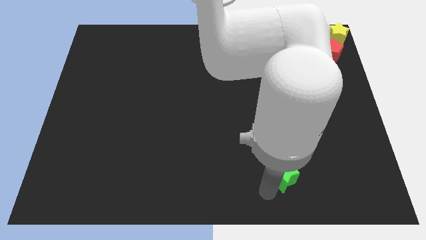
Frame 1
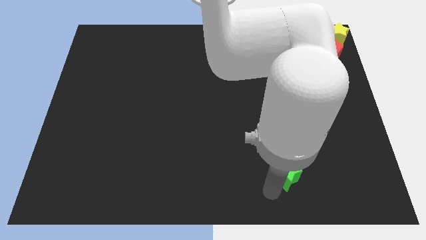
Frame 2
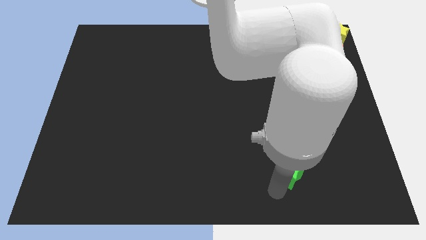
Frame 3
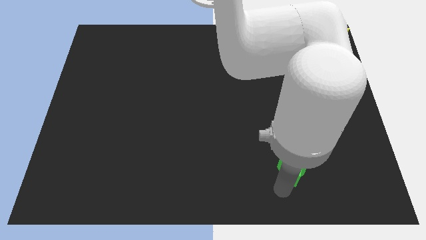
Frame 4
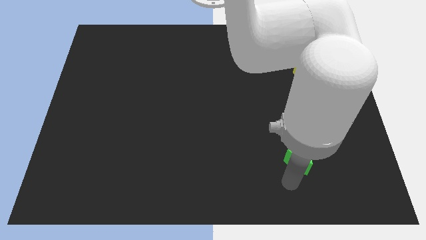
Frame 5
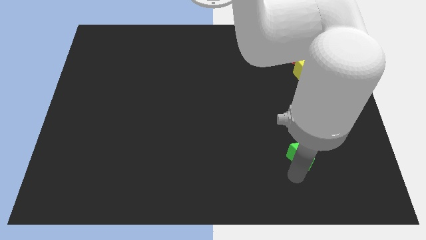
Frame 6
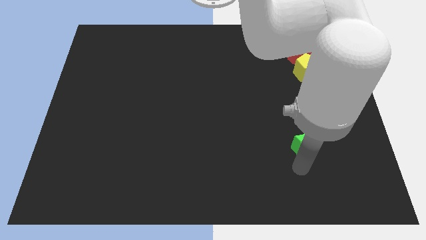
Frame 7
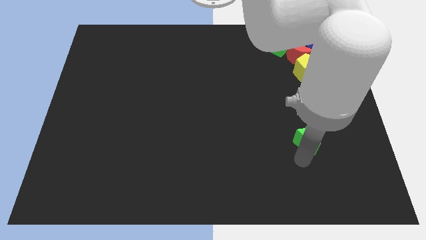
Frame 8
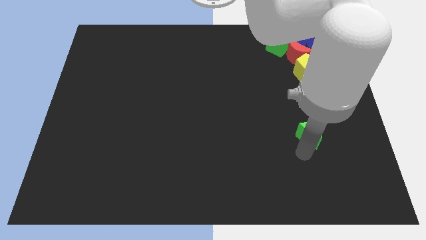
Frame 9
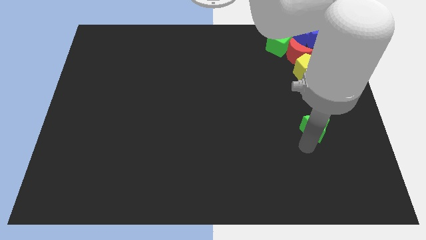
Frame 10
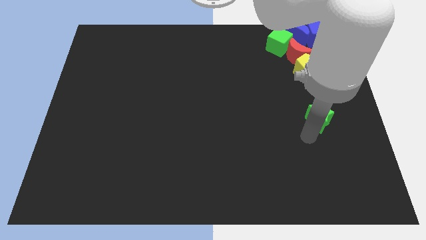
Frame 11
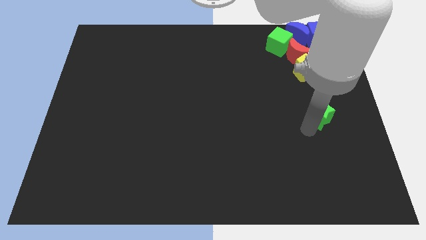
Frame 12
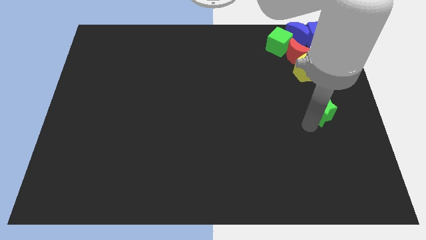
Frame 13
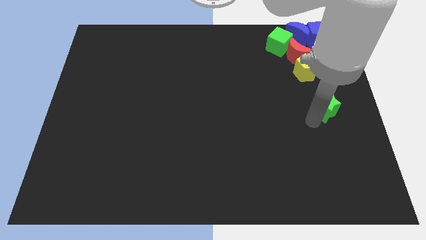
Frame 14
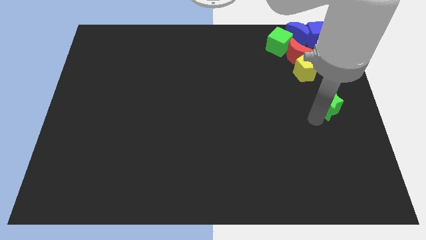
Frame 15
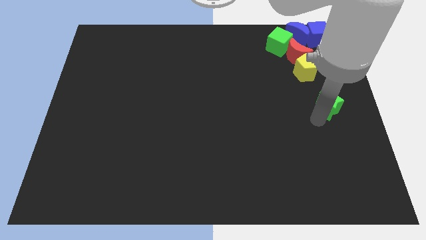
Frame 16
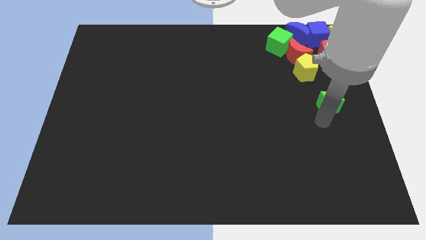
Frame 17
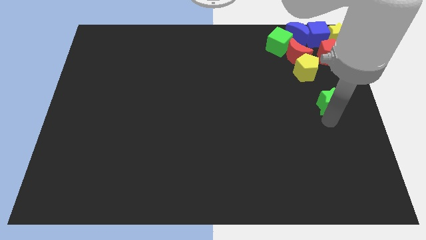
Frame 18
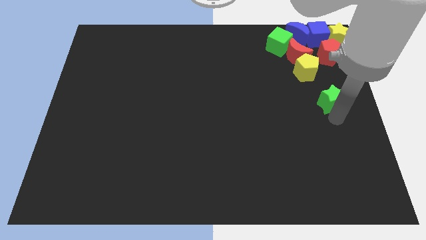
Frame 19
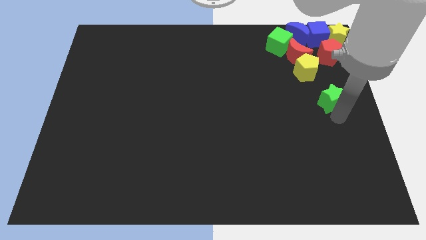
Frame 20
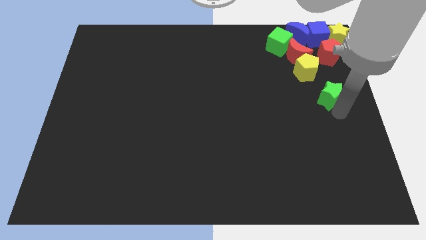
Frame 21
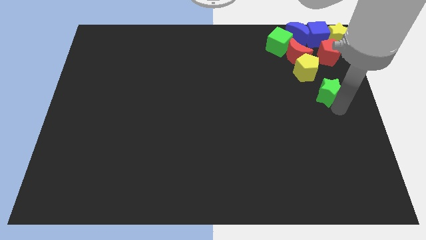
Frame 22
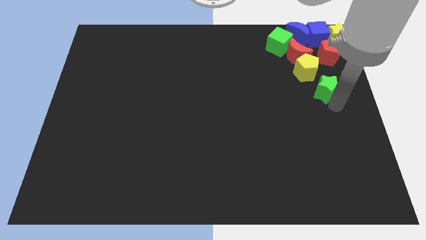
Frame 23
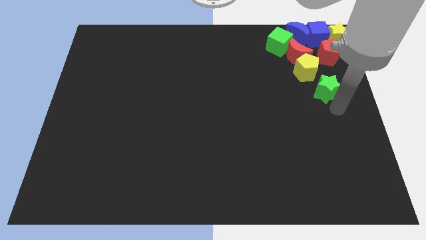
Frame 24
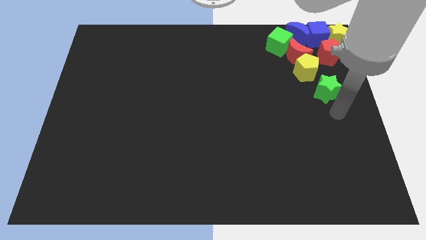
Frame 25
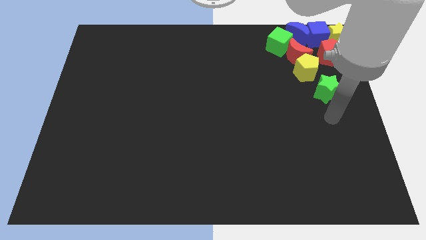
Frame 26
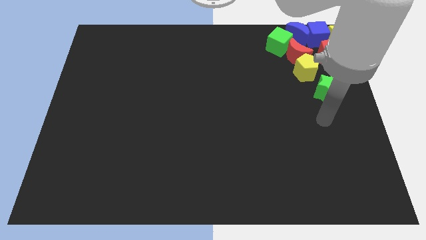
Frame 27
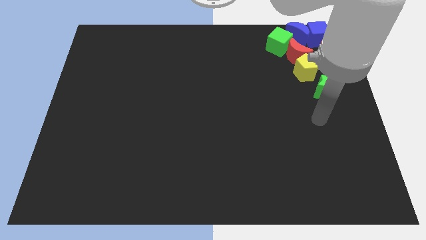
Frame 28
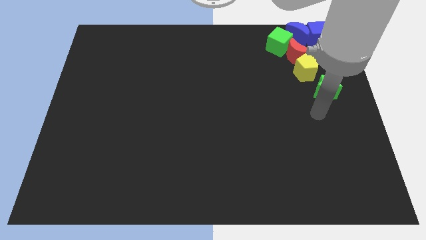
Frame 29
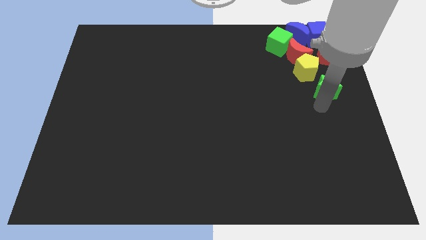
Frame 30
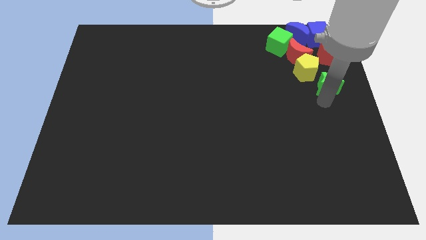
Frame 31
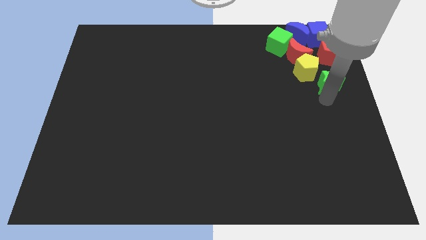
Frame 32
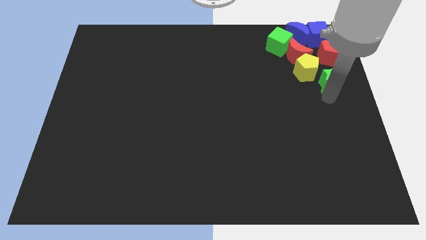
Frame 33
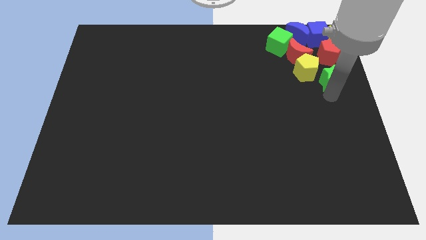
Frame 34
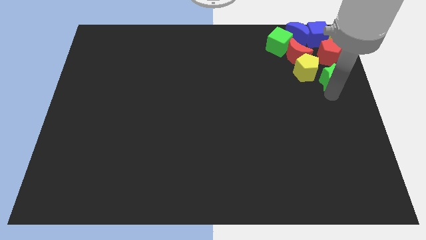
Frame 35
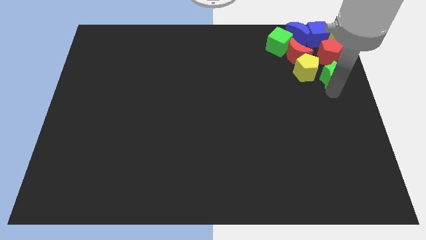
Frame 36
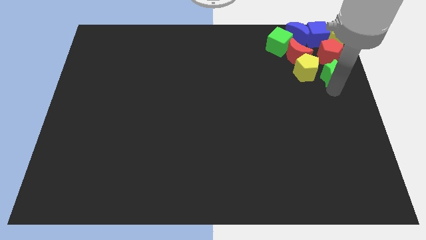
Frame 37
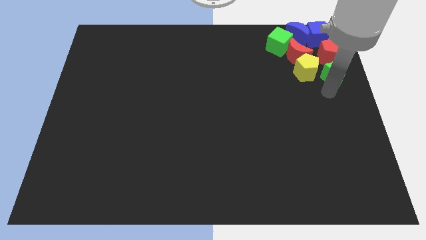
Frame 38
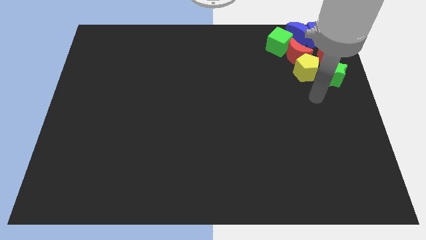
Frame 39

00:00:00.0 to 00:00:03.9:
place the green star below the red pentagon

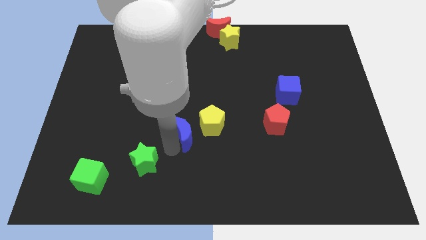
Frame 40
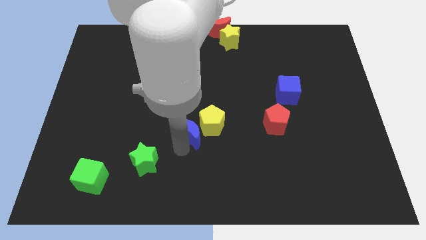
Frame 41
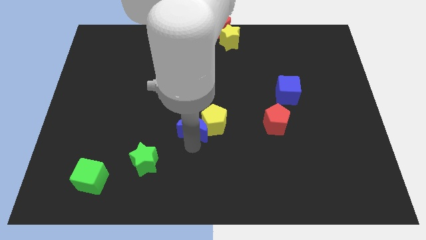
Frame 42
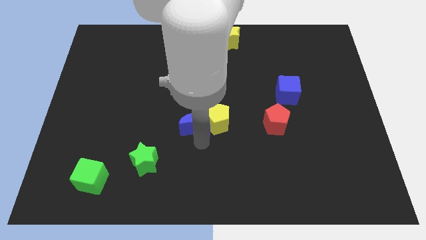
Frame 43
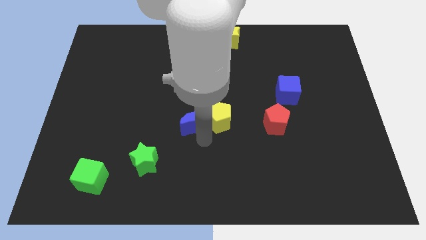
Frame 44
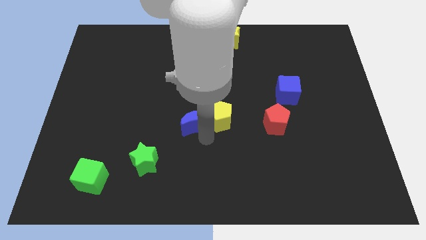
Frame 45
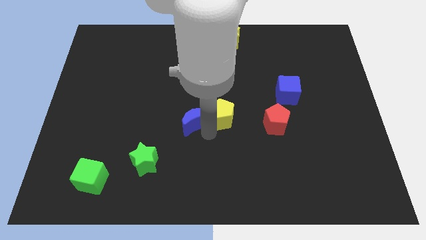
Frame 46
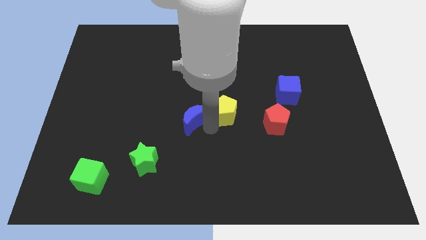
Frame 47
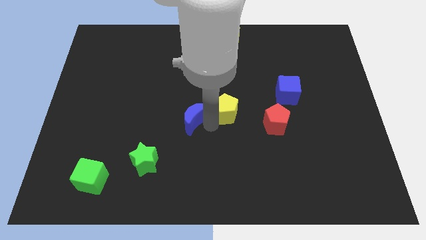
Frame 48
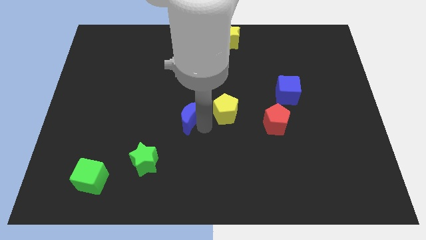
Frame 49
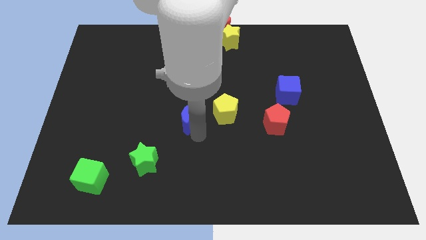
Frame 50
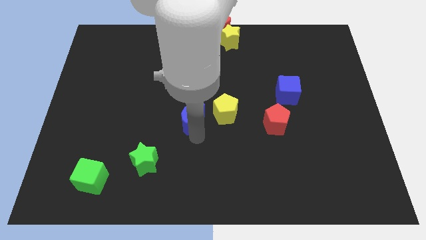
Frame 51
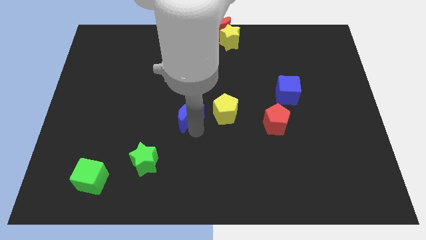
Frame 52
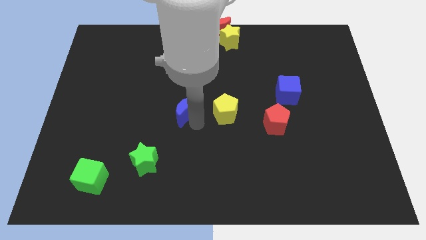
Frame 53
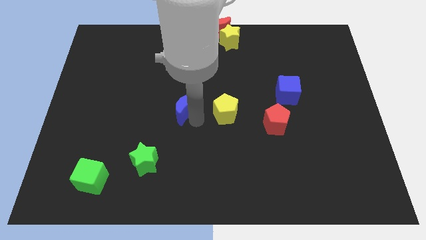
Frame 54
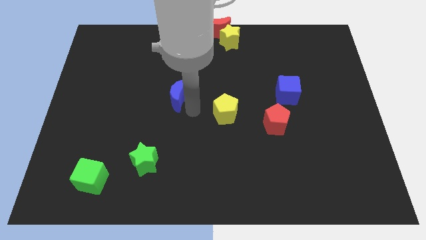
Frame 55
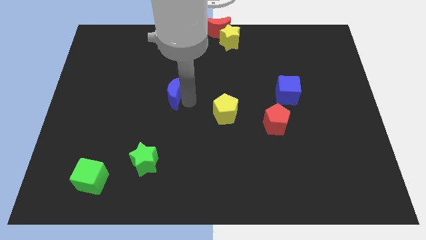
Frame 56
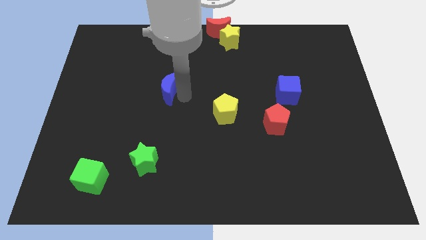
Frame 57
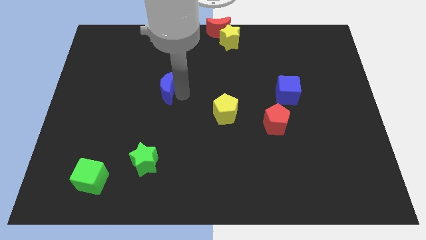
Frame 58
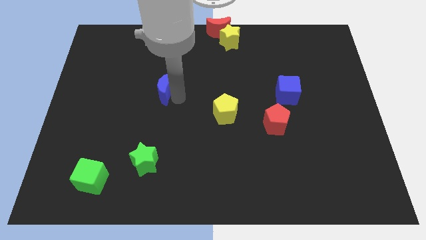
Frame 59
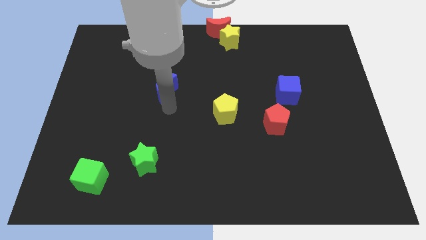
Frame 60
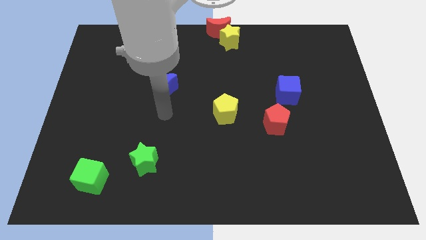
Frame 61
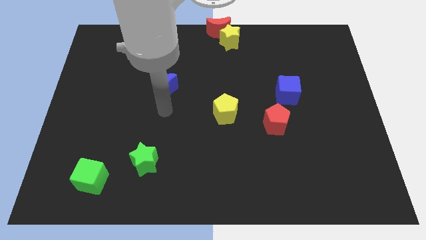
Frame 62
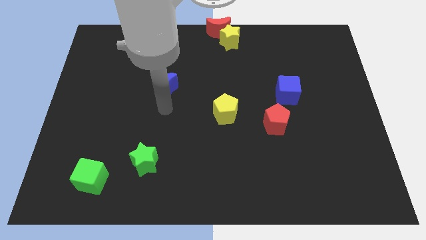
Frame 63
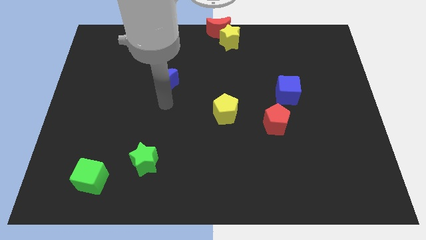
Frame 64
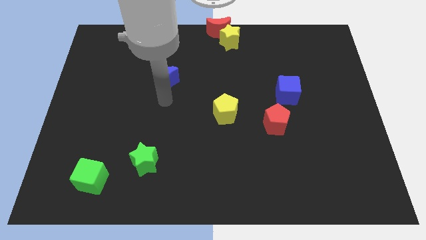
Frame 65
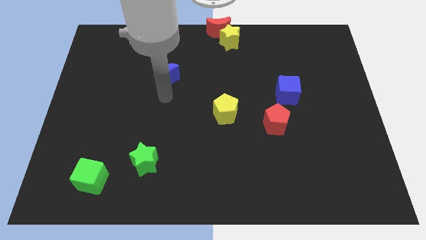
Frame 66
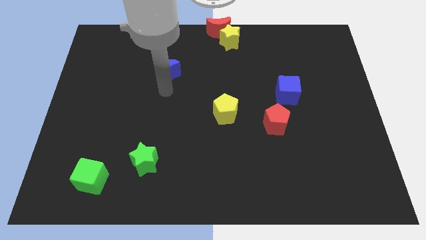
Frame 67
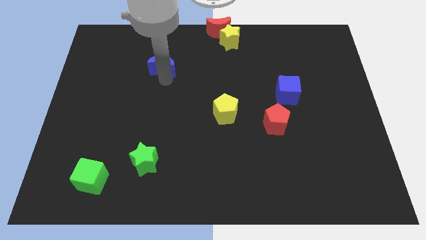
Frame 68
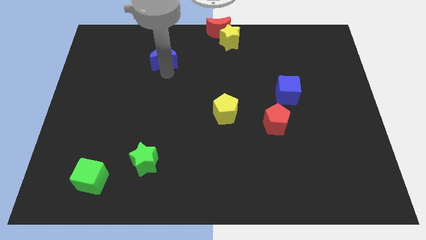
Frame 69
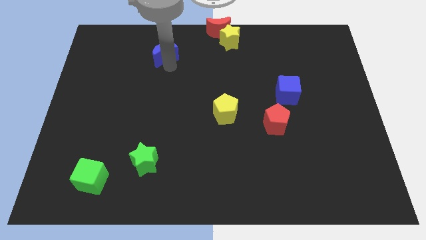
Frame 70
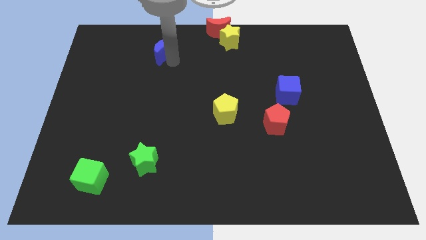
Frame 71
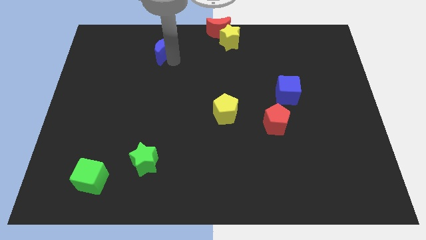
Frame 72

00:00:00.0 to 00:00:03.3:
separate blue moon from yellow pentagon

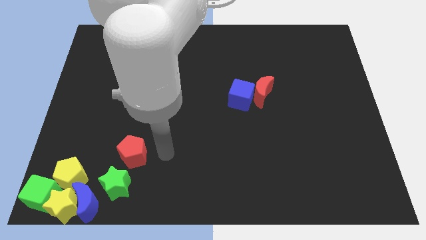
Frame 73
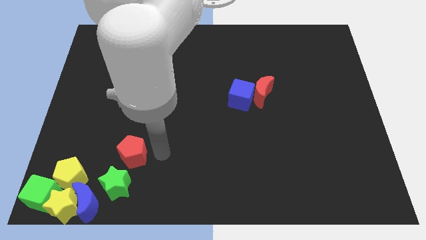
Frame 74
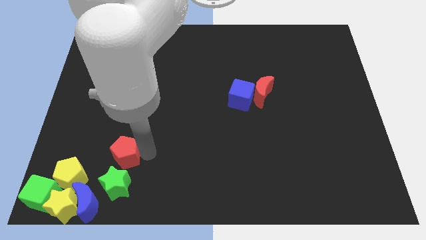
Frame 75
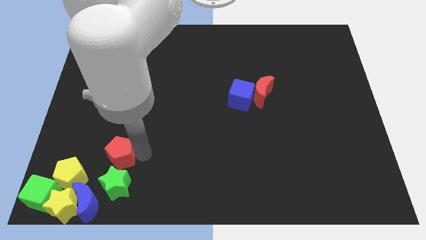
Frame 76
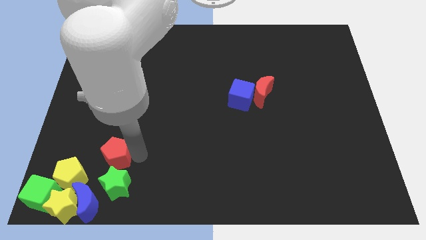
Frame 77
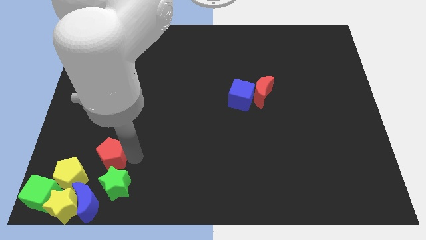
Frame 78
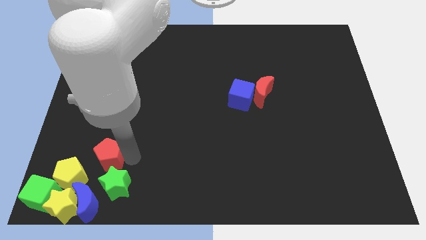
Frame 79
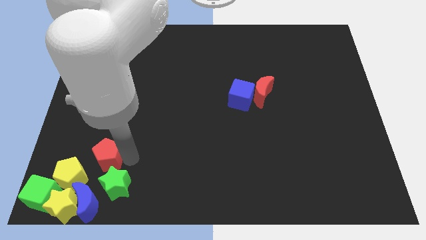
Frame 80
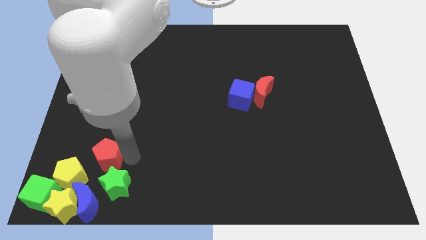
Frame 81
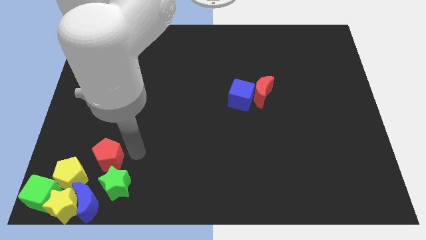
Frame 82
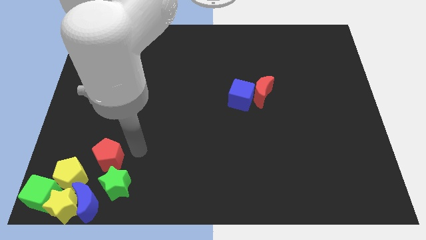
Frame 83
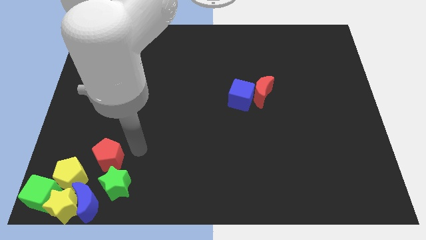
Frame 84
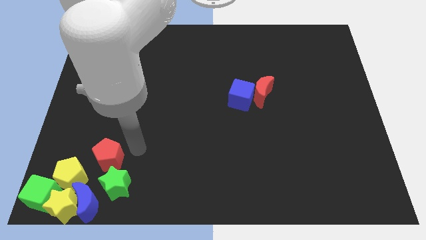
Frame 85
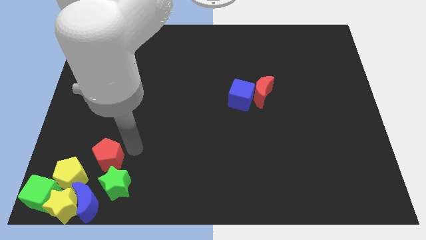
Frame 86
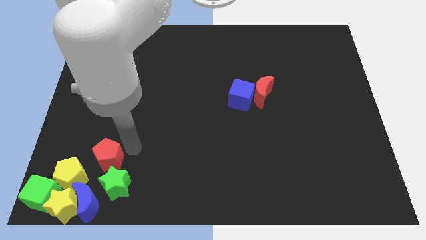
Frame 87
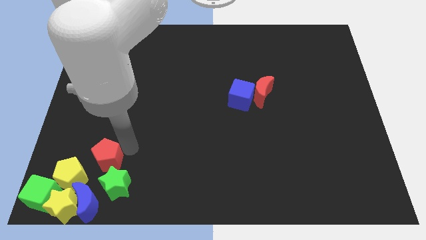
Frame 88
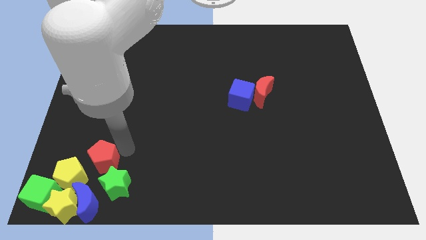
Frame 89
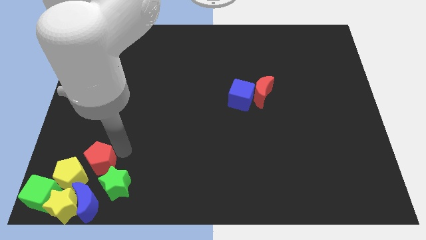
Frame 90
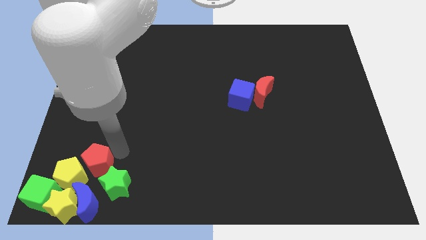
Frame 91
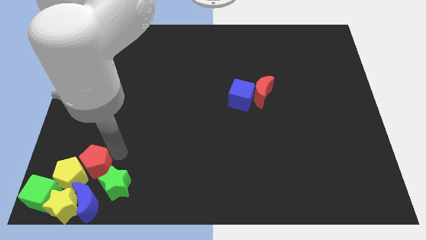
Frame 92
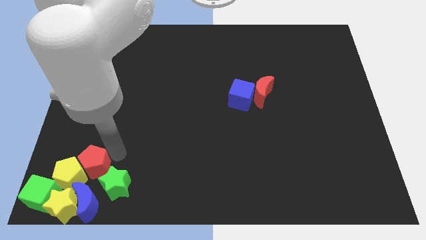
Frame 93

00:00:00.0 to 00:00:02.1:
move the red pentagon into the yellow pentagon
